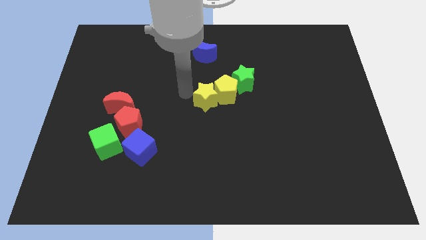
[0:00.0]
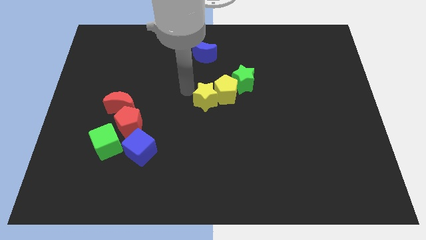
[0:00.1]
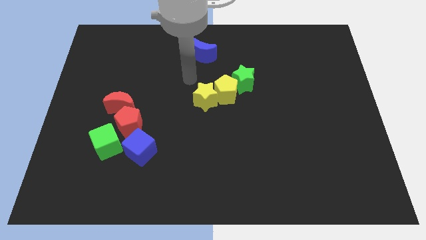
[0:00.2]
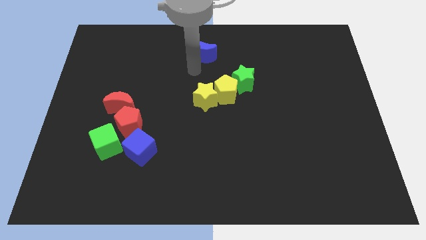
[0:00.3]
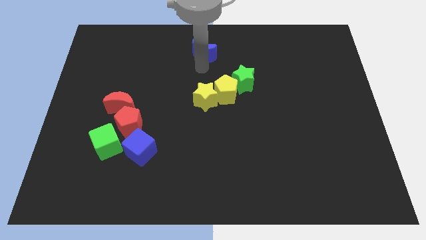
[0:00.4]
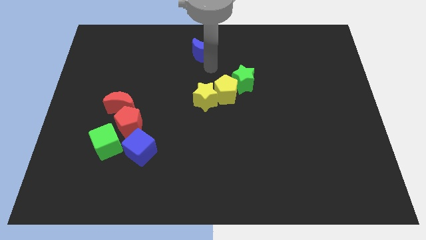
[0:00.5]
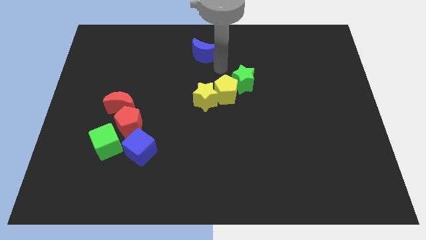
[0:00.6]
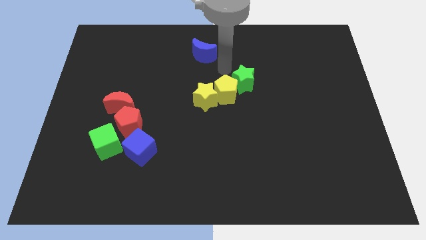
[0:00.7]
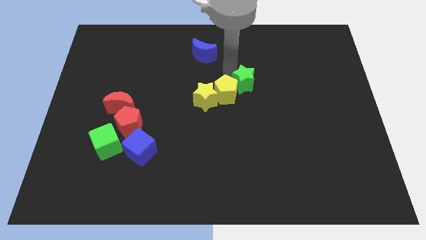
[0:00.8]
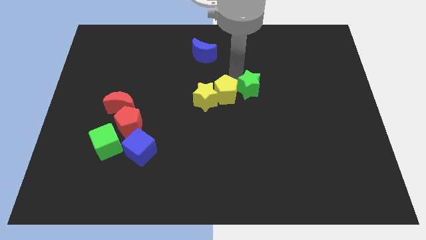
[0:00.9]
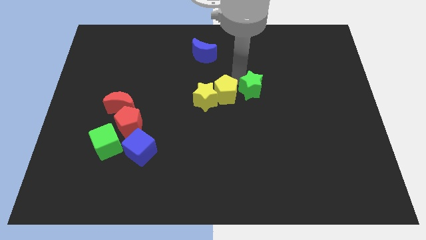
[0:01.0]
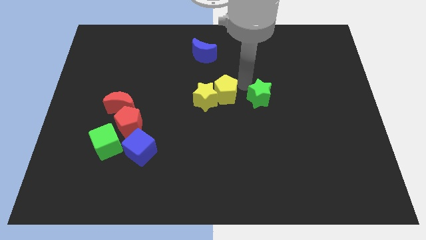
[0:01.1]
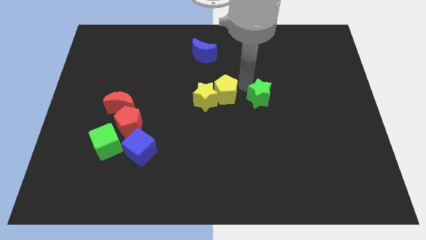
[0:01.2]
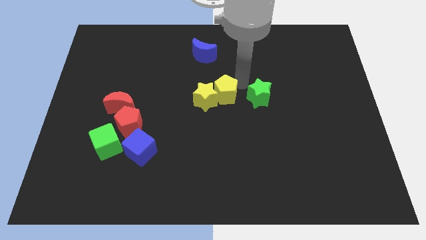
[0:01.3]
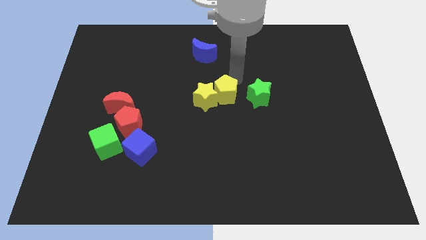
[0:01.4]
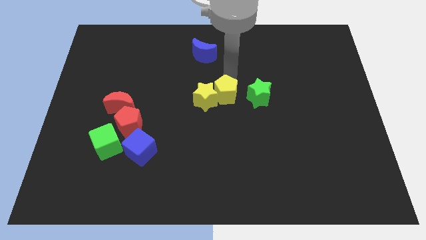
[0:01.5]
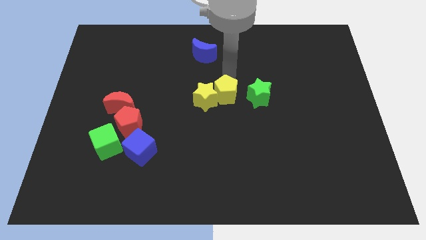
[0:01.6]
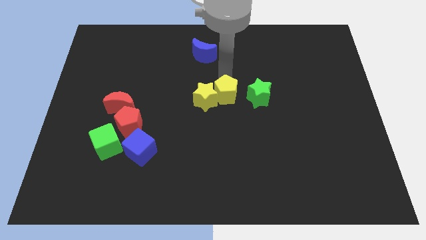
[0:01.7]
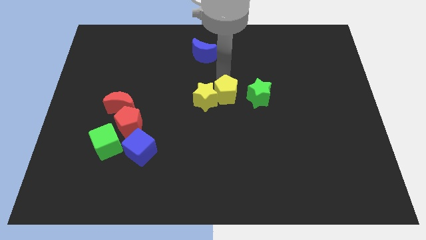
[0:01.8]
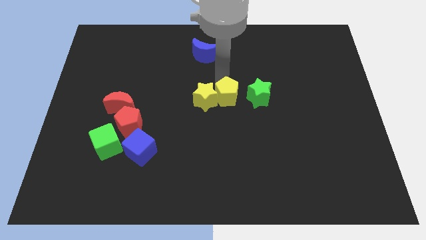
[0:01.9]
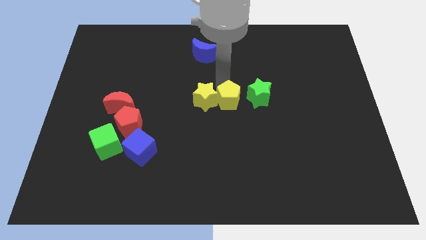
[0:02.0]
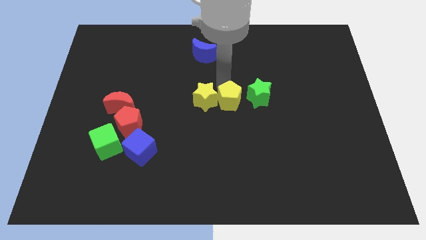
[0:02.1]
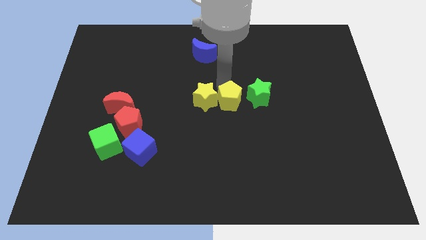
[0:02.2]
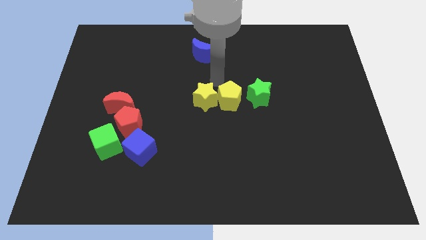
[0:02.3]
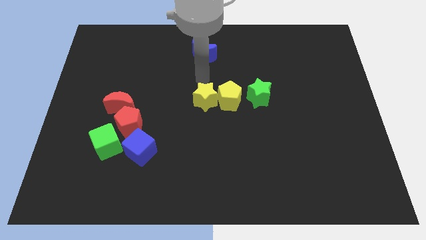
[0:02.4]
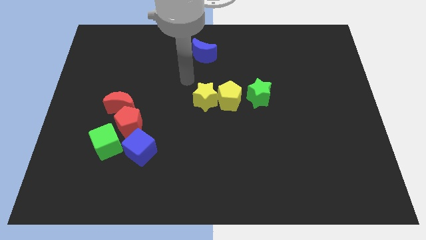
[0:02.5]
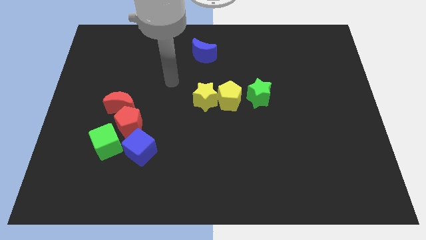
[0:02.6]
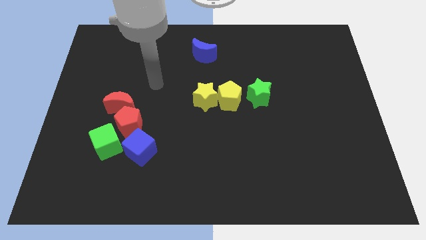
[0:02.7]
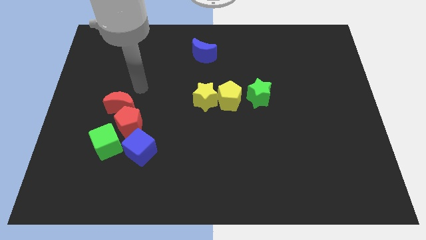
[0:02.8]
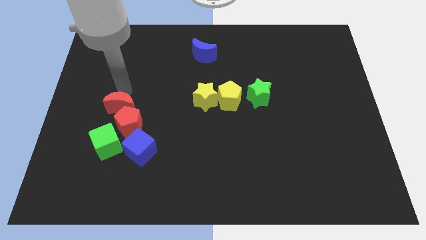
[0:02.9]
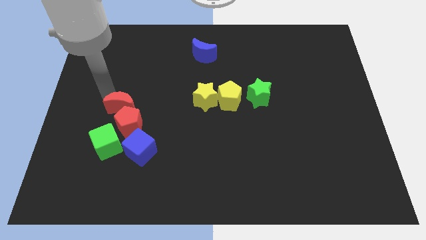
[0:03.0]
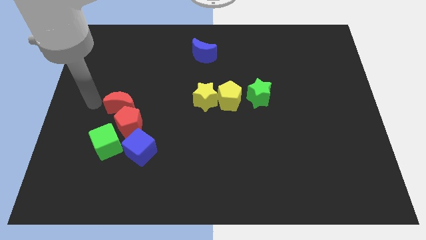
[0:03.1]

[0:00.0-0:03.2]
make a horizontal line out of yellow blocks and the green star

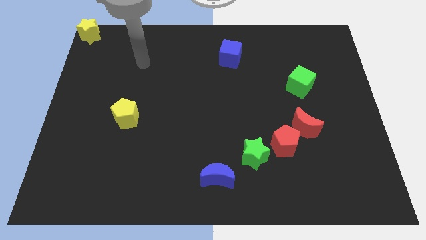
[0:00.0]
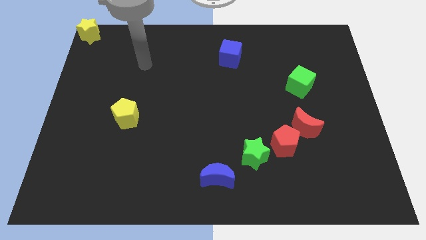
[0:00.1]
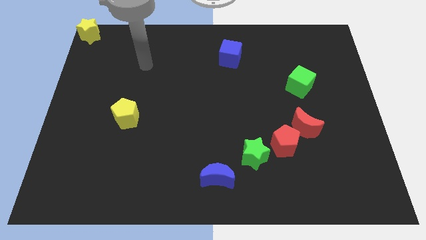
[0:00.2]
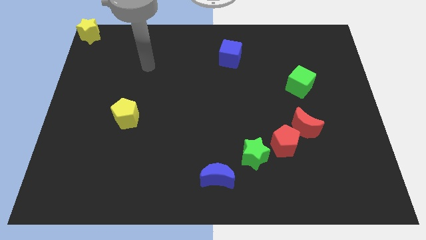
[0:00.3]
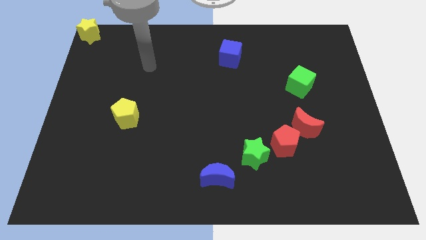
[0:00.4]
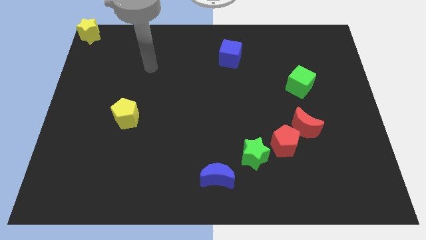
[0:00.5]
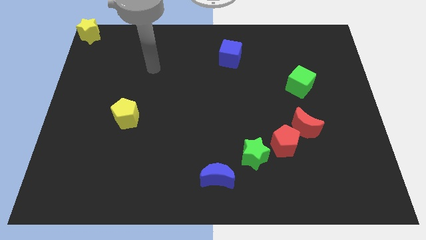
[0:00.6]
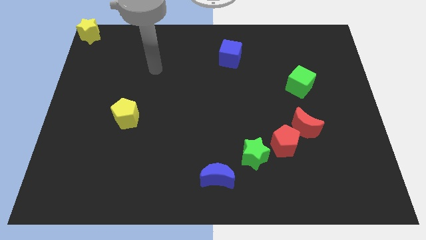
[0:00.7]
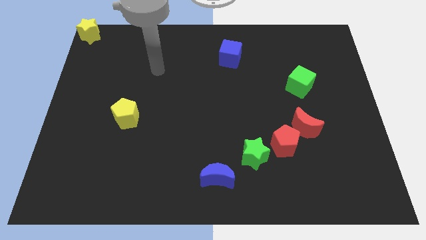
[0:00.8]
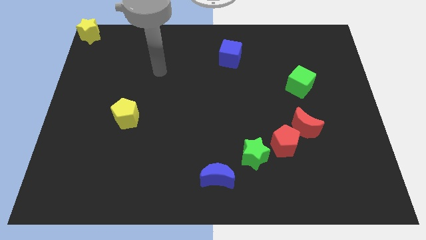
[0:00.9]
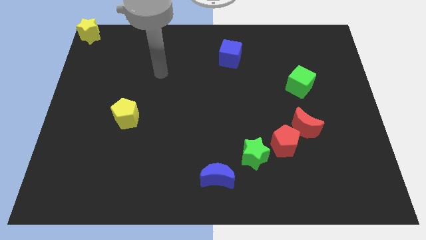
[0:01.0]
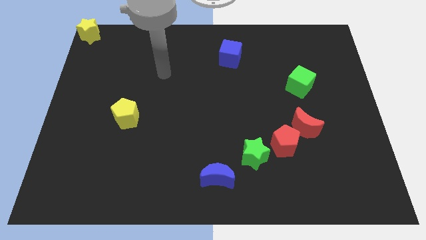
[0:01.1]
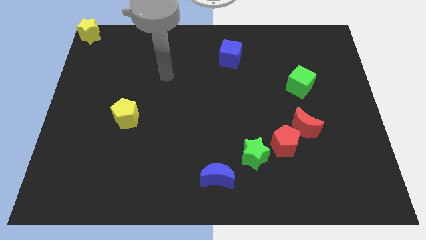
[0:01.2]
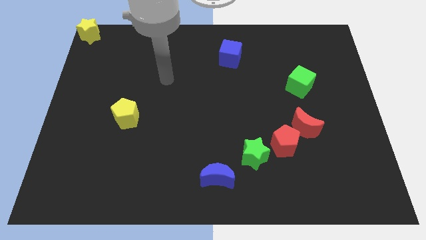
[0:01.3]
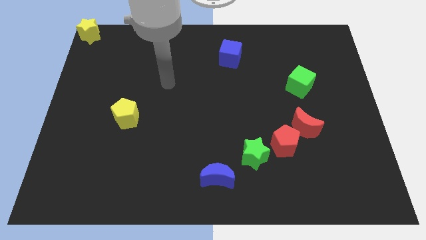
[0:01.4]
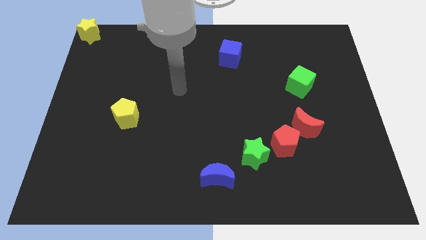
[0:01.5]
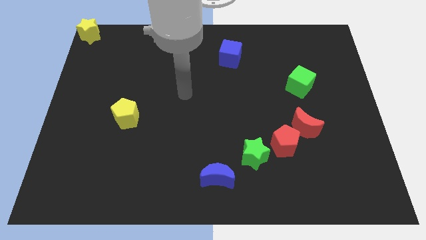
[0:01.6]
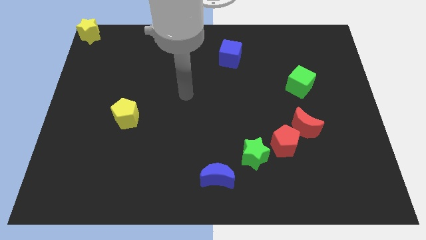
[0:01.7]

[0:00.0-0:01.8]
place your arm in between the yellow pentagon and blue cube

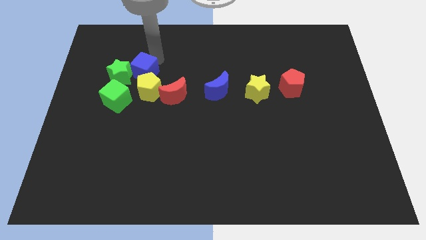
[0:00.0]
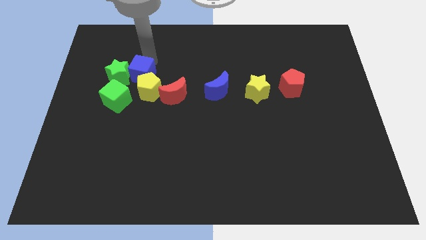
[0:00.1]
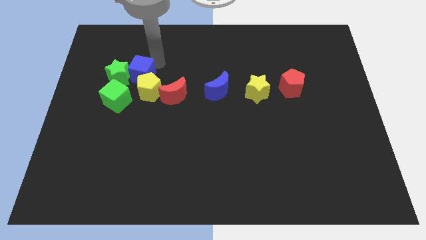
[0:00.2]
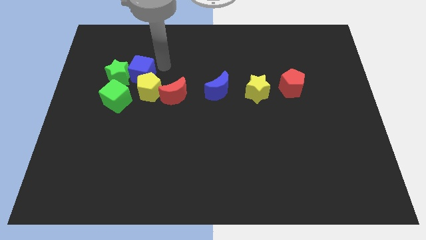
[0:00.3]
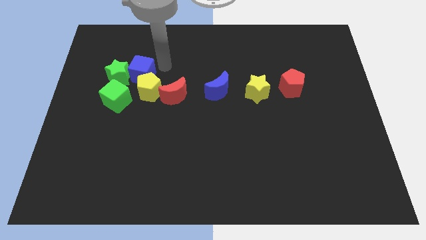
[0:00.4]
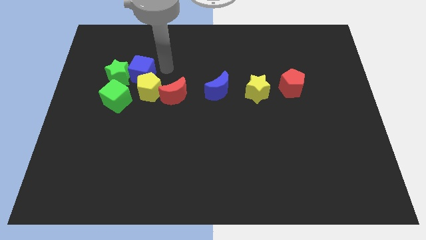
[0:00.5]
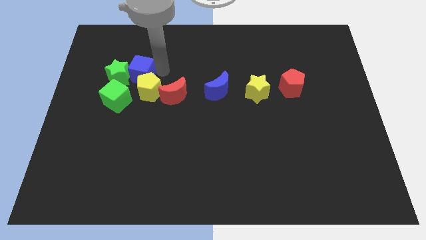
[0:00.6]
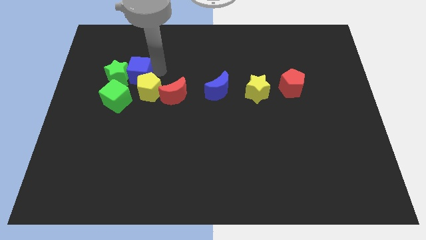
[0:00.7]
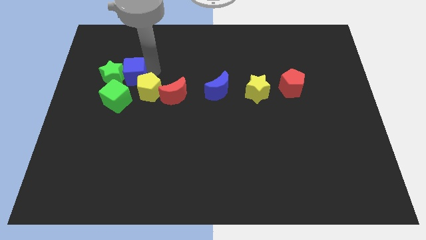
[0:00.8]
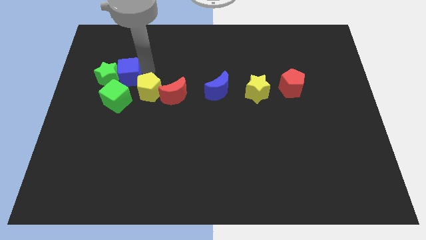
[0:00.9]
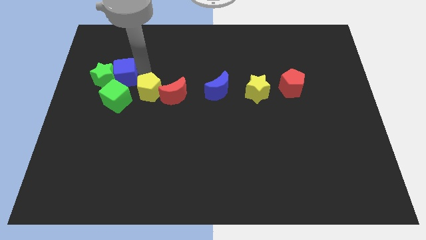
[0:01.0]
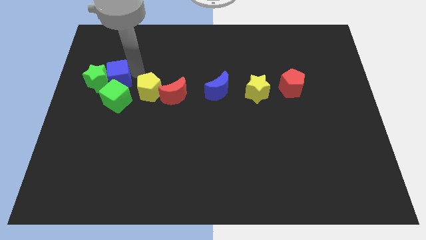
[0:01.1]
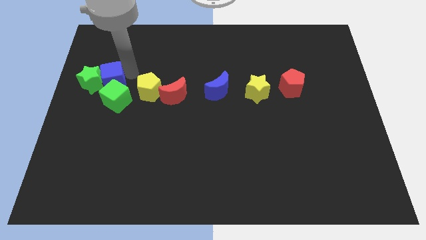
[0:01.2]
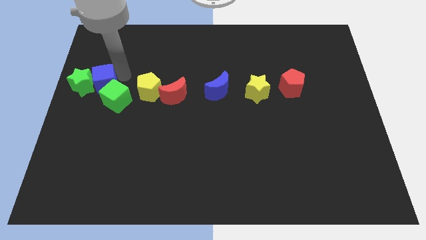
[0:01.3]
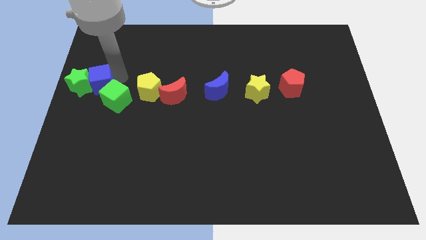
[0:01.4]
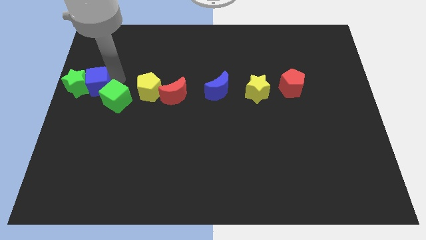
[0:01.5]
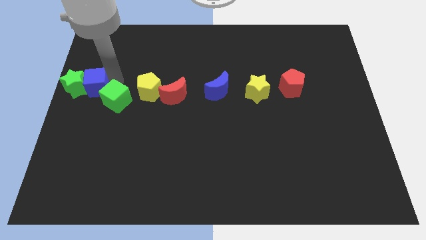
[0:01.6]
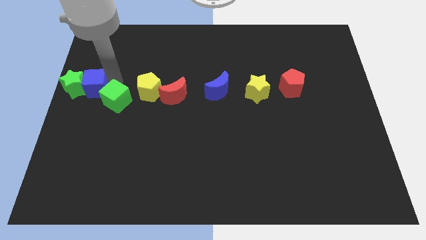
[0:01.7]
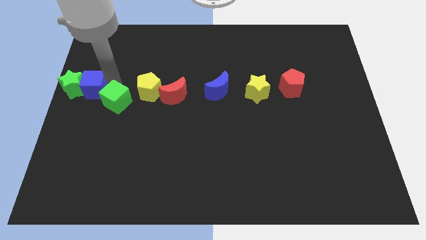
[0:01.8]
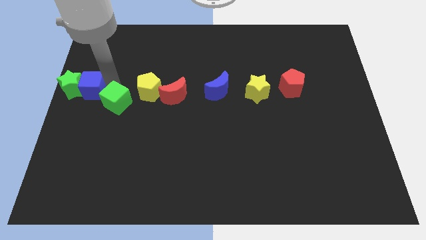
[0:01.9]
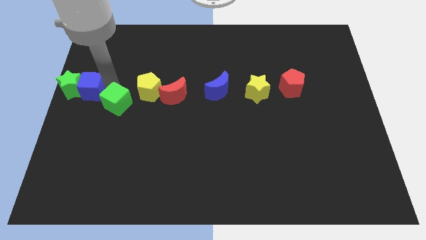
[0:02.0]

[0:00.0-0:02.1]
push the blue cube with the green star to the center left

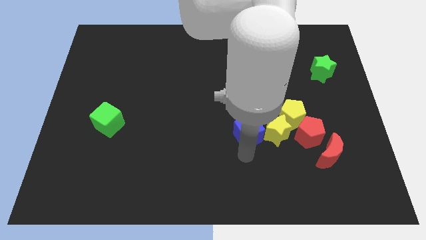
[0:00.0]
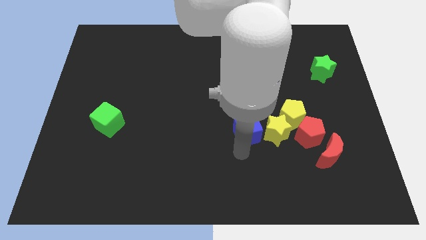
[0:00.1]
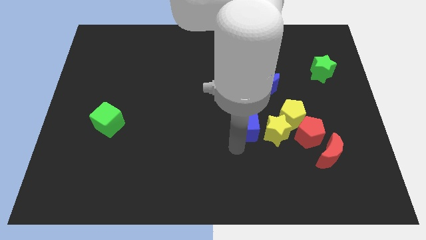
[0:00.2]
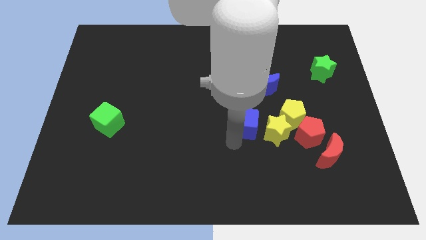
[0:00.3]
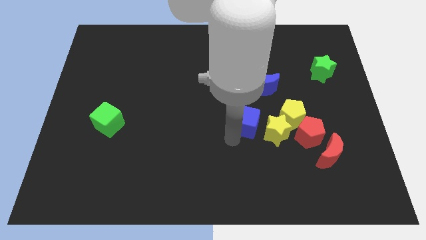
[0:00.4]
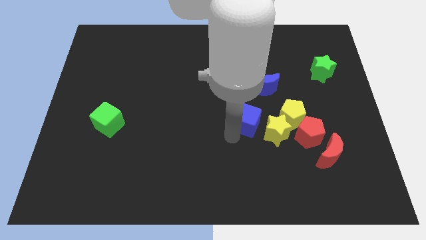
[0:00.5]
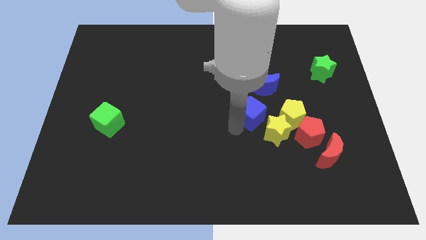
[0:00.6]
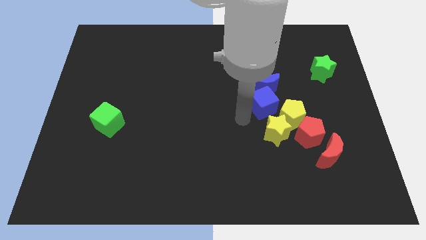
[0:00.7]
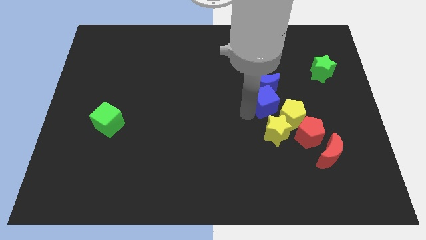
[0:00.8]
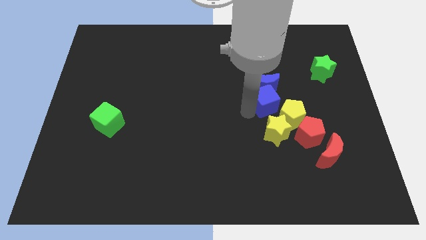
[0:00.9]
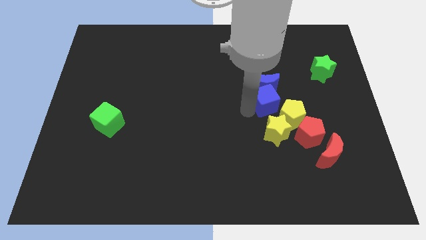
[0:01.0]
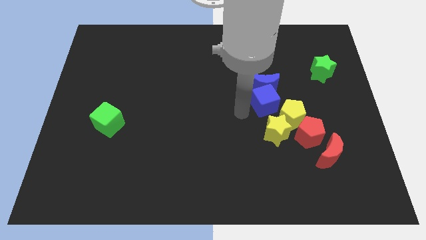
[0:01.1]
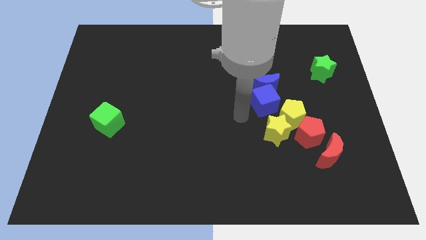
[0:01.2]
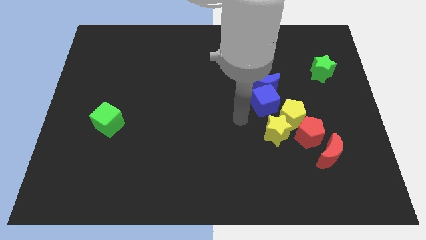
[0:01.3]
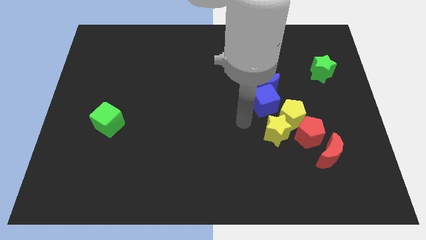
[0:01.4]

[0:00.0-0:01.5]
place blue cube at the bottom of blue crescent

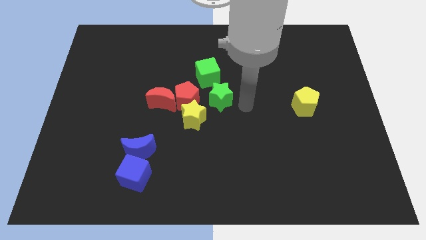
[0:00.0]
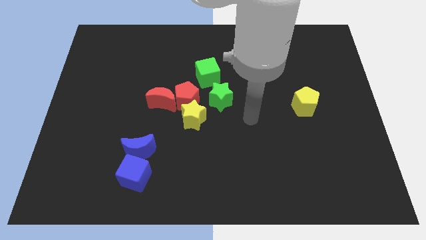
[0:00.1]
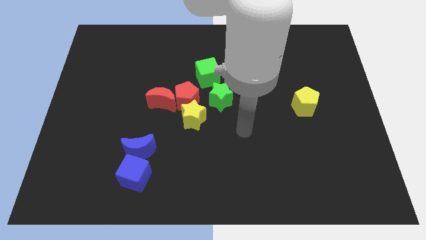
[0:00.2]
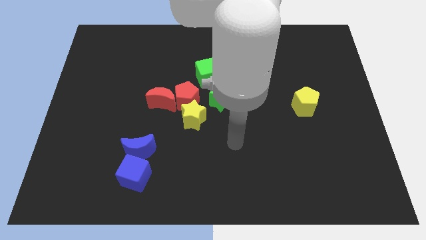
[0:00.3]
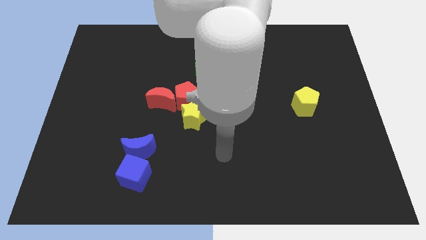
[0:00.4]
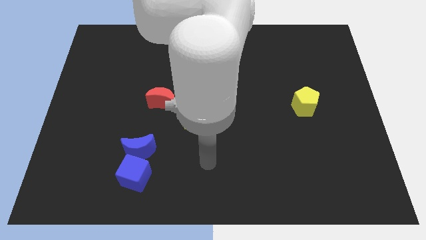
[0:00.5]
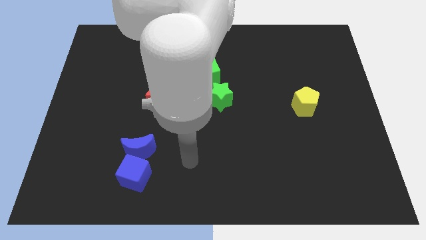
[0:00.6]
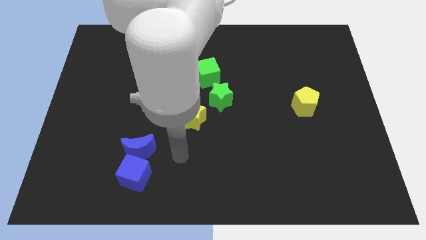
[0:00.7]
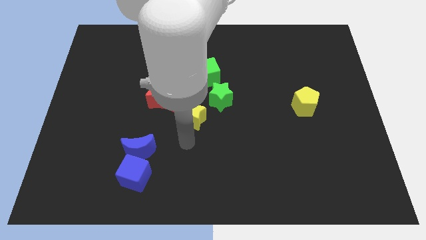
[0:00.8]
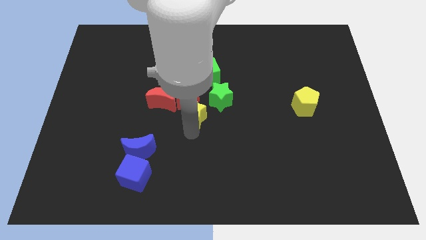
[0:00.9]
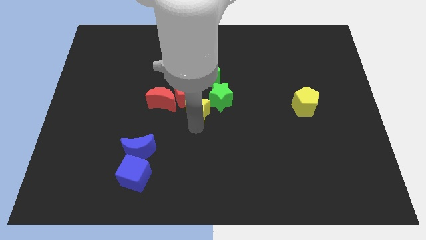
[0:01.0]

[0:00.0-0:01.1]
move your arm towards the yellow star
